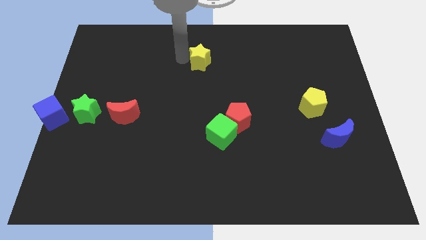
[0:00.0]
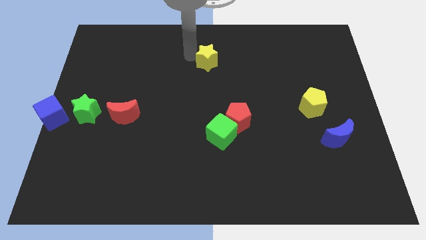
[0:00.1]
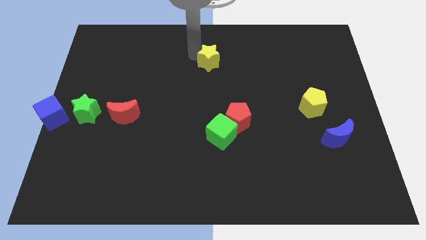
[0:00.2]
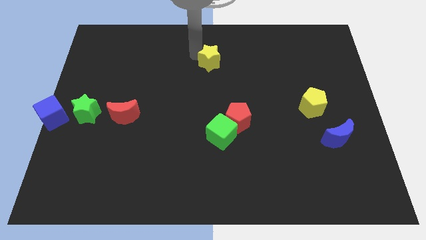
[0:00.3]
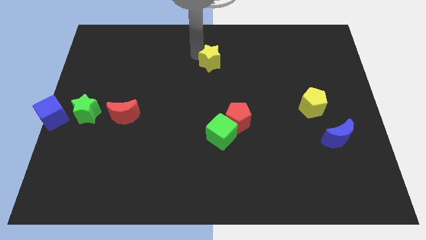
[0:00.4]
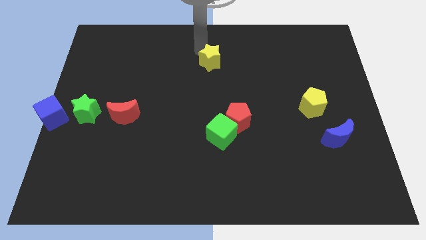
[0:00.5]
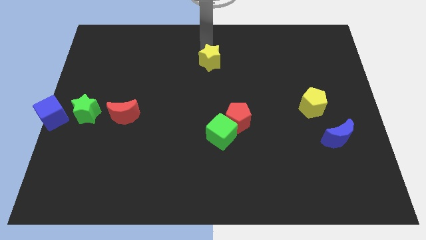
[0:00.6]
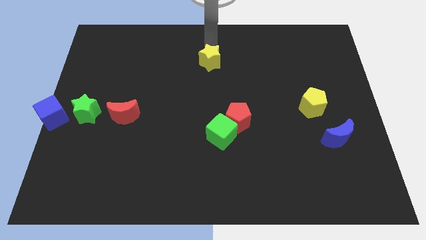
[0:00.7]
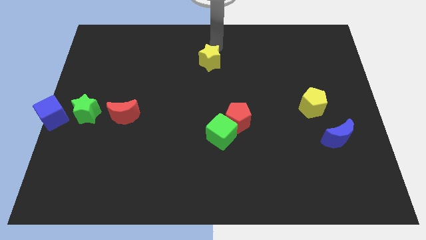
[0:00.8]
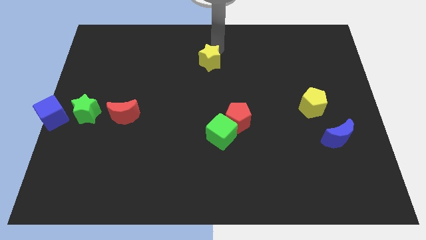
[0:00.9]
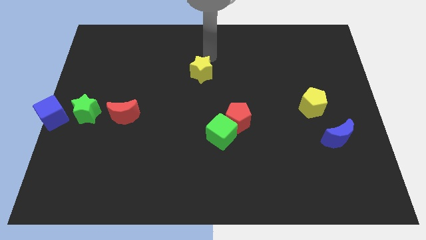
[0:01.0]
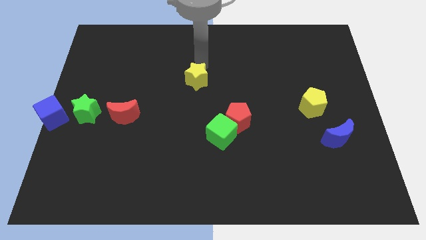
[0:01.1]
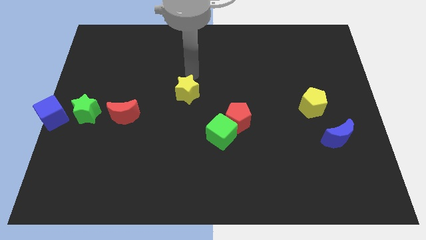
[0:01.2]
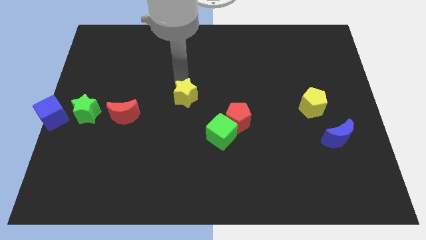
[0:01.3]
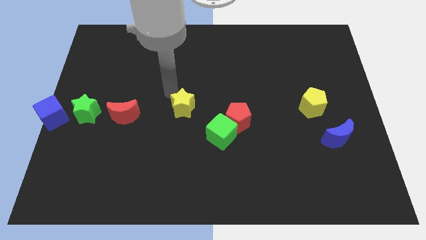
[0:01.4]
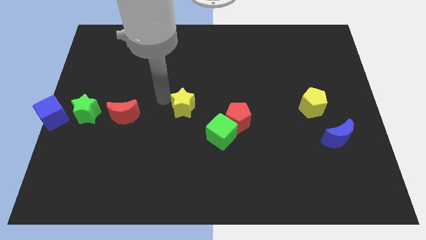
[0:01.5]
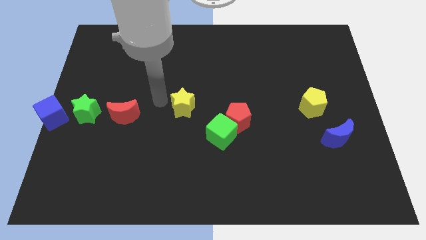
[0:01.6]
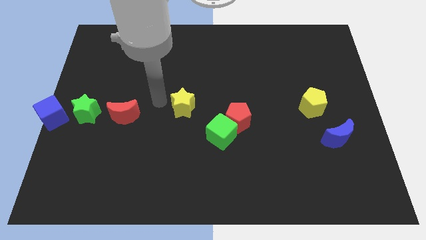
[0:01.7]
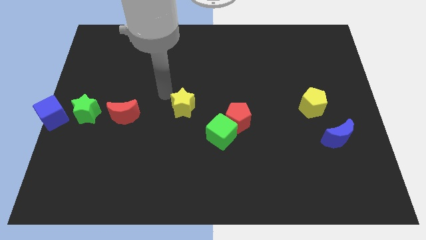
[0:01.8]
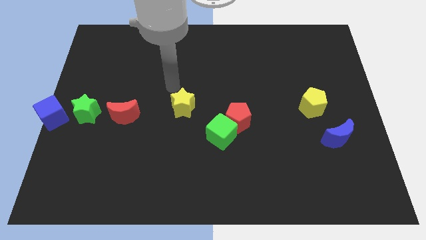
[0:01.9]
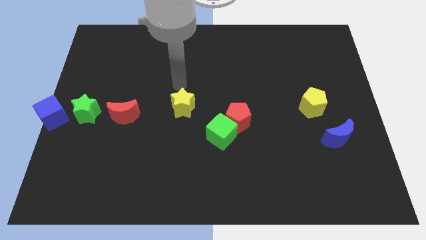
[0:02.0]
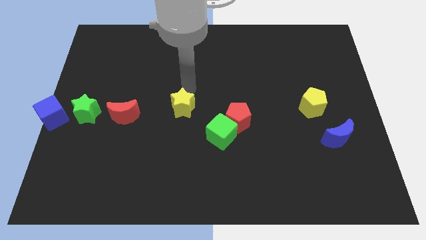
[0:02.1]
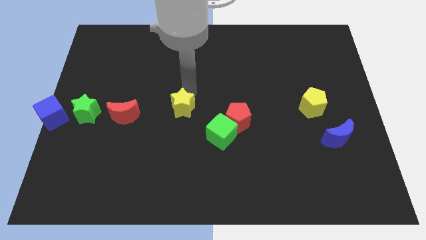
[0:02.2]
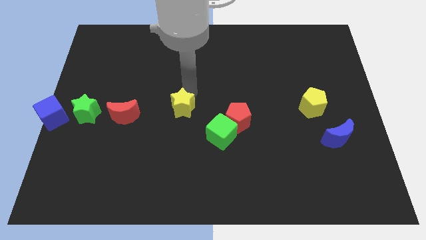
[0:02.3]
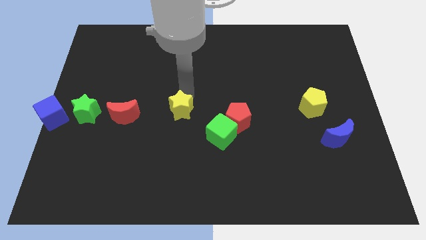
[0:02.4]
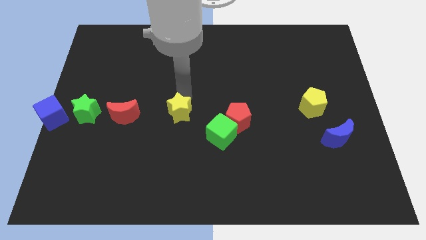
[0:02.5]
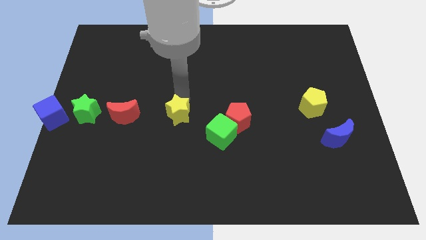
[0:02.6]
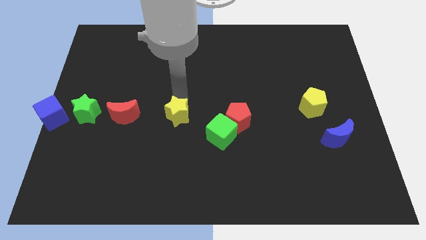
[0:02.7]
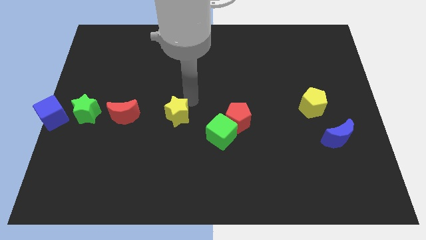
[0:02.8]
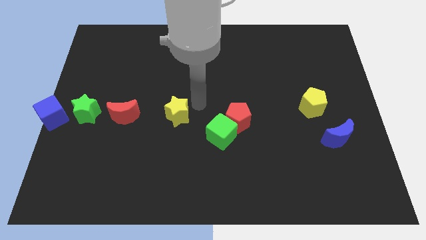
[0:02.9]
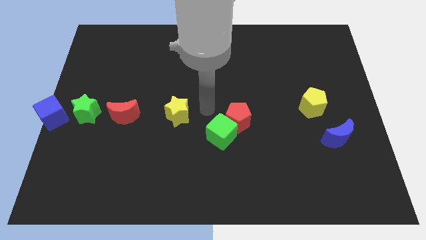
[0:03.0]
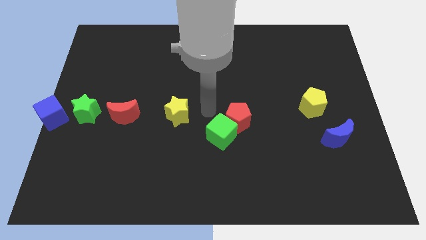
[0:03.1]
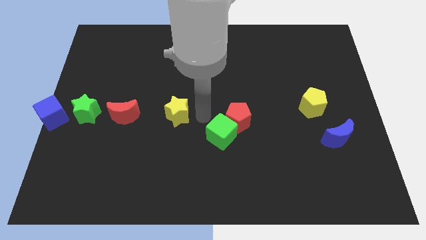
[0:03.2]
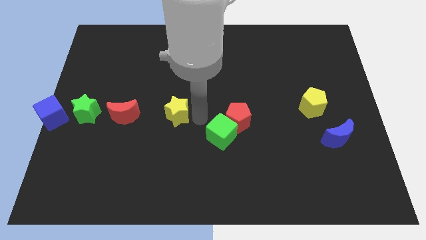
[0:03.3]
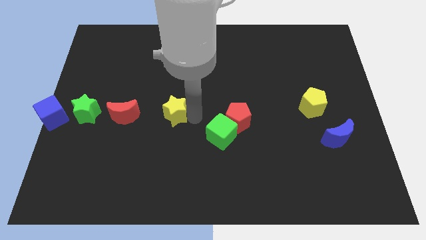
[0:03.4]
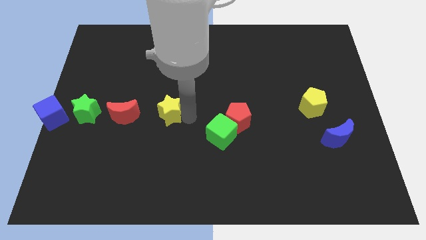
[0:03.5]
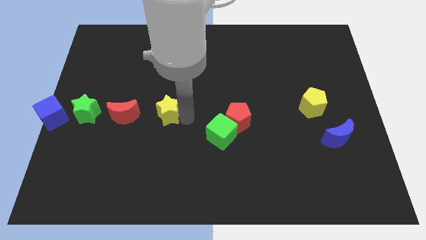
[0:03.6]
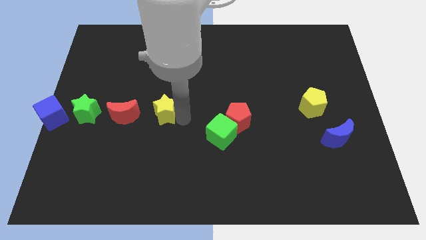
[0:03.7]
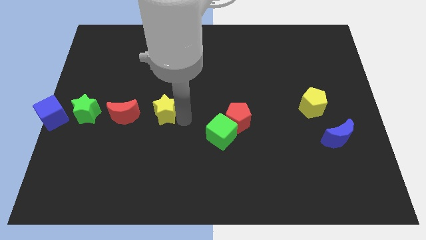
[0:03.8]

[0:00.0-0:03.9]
drag yellow star beside red moon

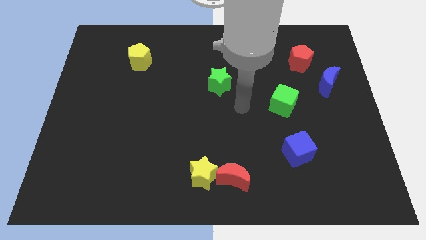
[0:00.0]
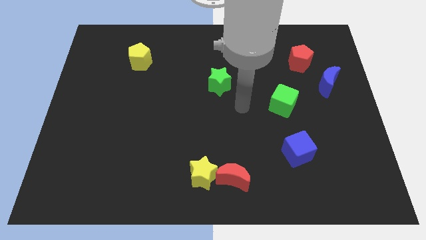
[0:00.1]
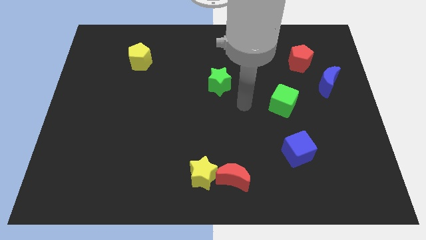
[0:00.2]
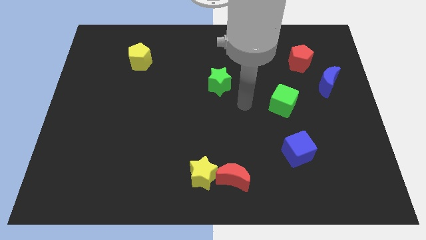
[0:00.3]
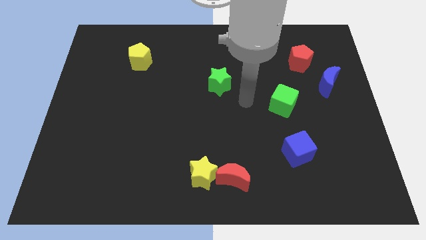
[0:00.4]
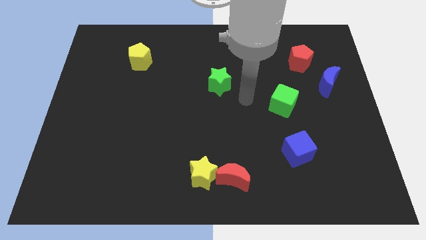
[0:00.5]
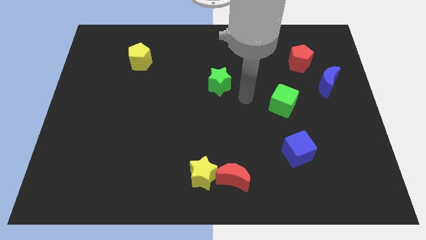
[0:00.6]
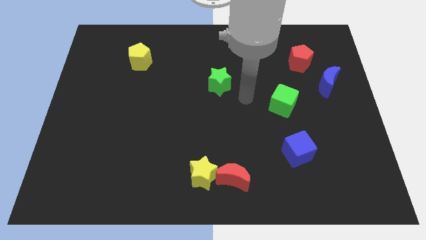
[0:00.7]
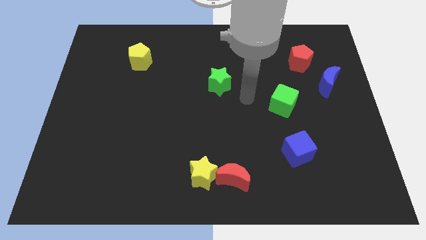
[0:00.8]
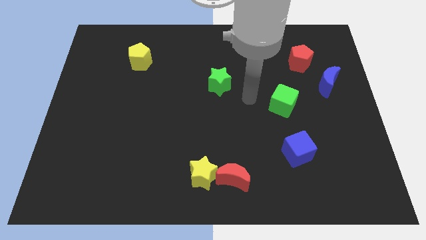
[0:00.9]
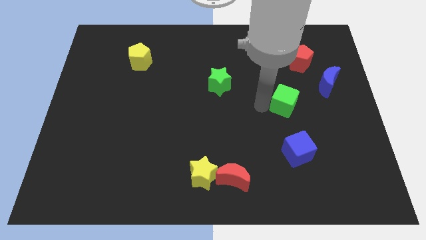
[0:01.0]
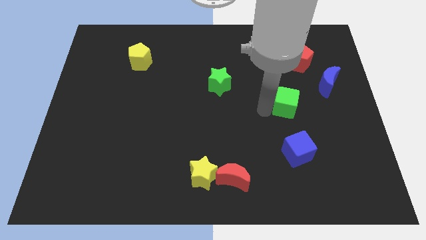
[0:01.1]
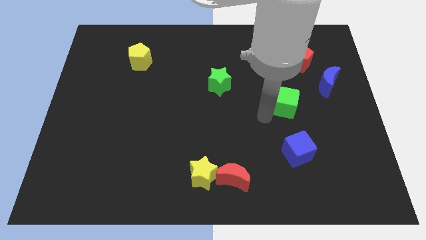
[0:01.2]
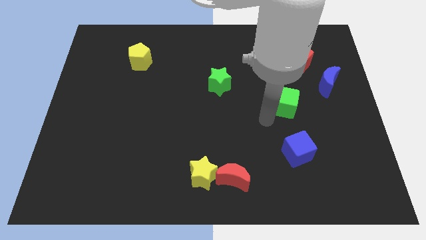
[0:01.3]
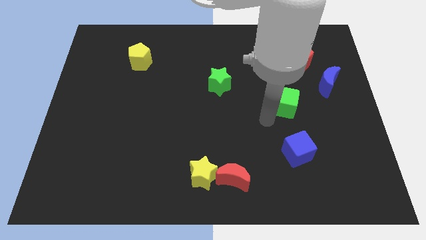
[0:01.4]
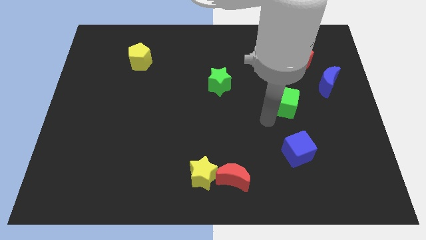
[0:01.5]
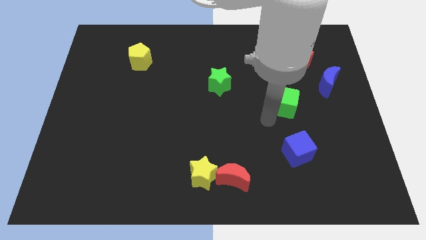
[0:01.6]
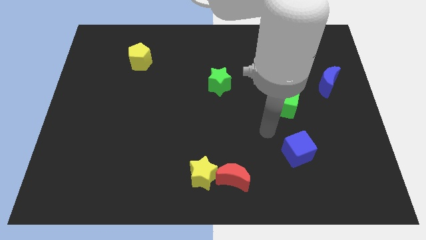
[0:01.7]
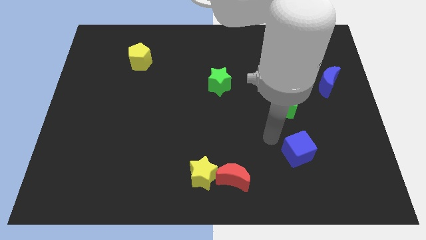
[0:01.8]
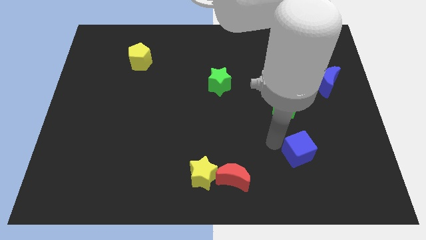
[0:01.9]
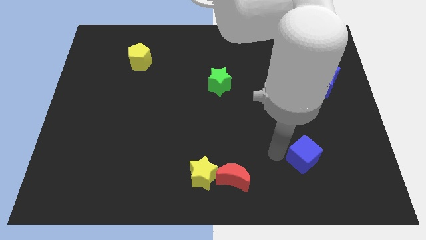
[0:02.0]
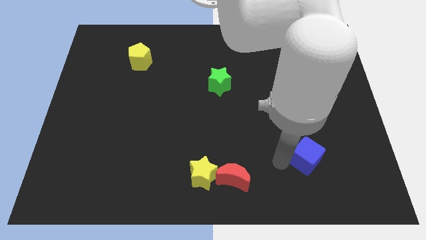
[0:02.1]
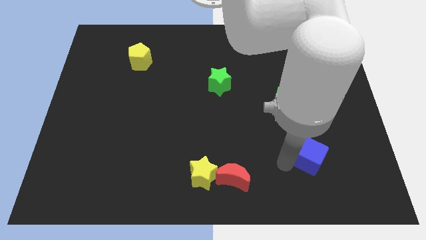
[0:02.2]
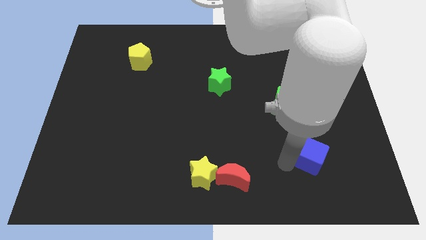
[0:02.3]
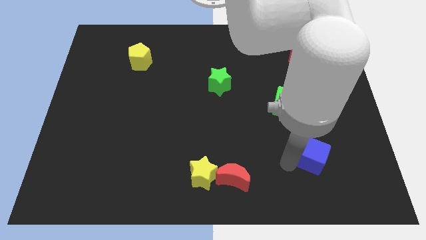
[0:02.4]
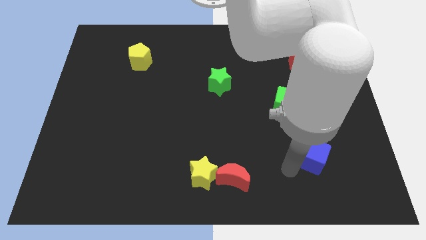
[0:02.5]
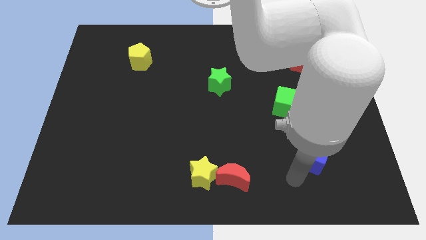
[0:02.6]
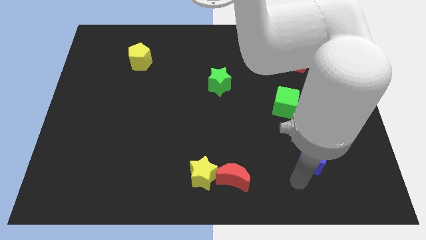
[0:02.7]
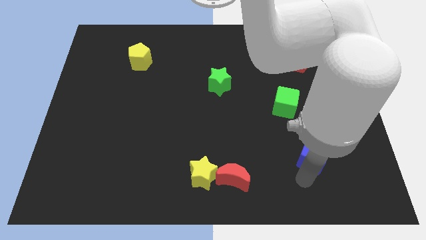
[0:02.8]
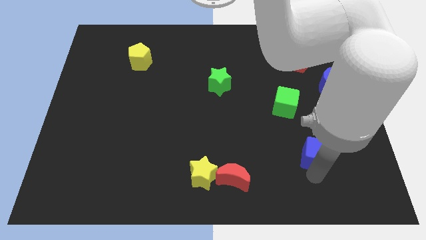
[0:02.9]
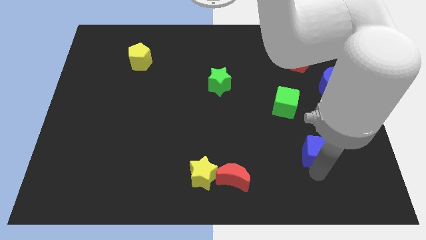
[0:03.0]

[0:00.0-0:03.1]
slide the blue cube slightly to the right

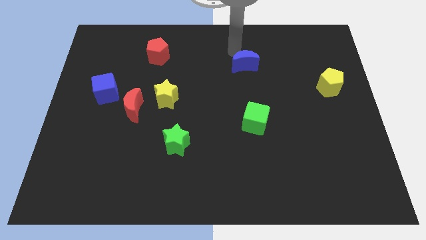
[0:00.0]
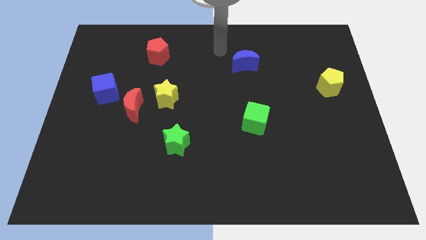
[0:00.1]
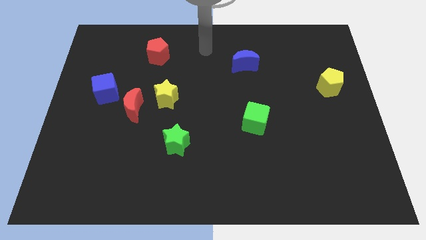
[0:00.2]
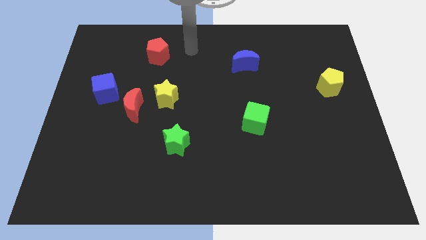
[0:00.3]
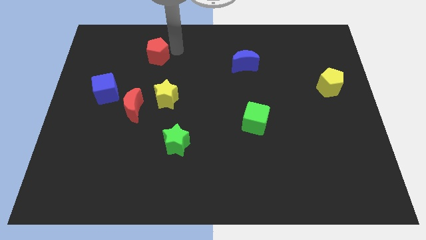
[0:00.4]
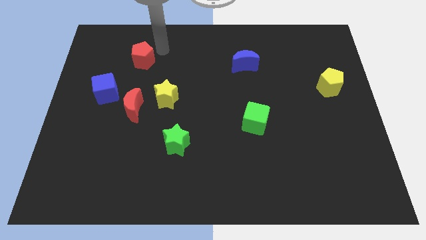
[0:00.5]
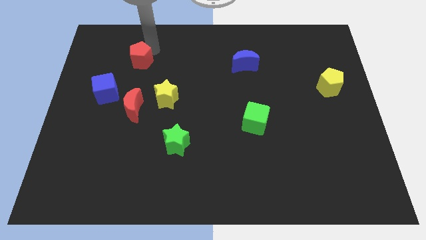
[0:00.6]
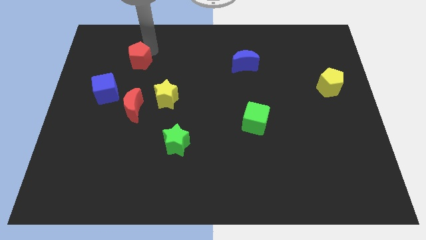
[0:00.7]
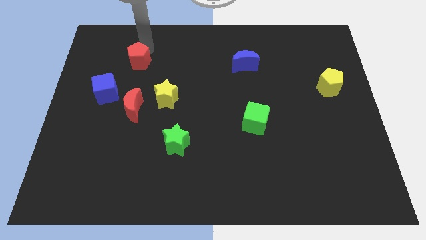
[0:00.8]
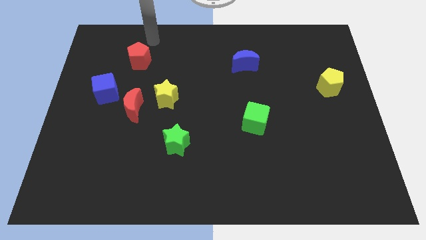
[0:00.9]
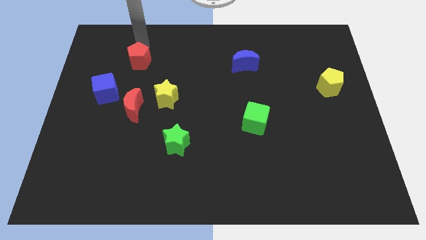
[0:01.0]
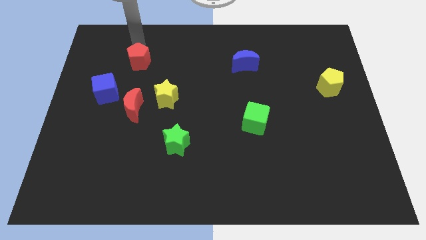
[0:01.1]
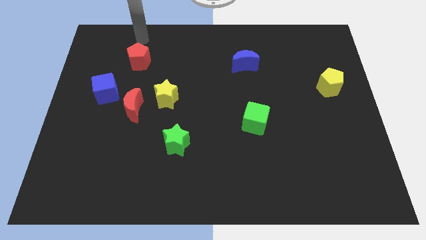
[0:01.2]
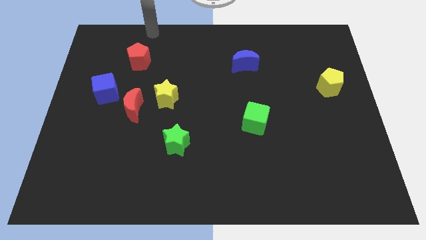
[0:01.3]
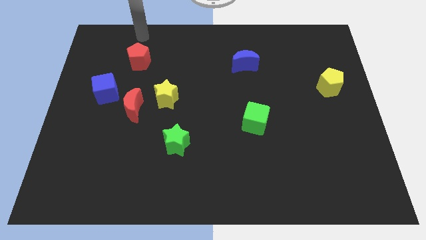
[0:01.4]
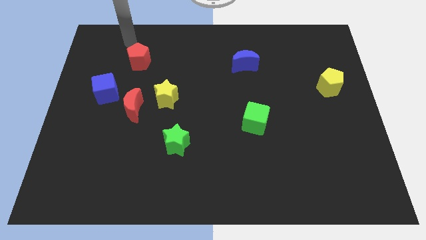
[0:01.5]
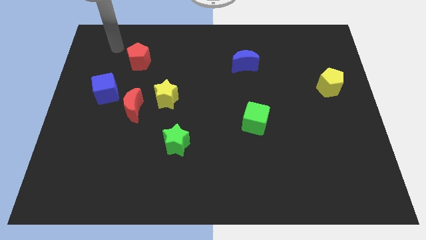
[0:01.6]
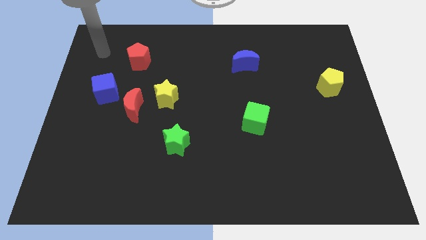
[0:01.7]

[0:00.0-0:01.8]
place the red pentagon above the red moon

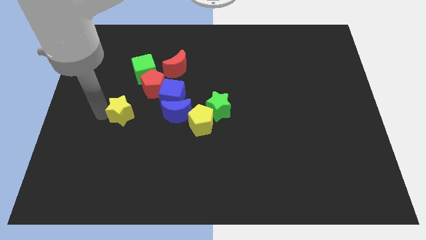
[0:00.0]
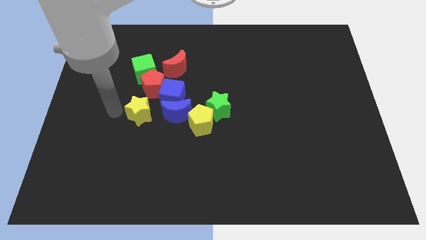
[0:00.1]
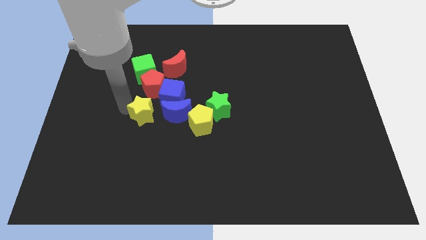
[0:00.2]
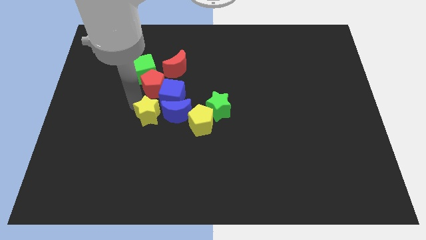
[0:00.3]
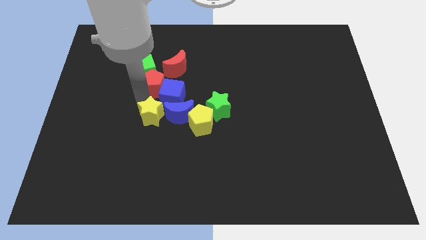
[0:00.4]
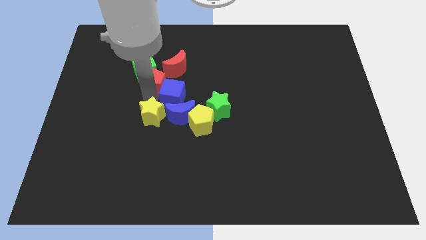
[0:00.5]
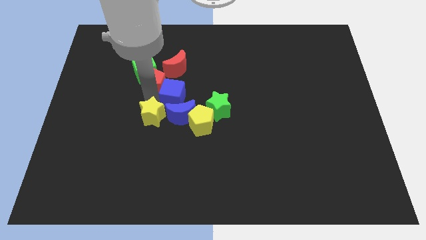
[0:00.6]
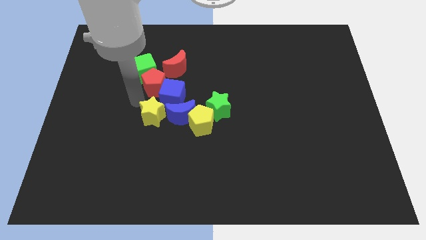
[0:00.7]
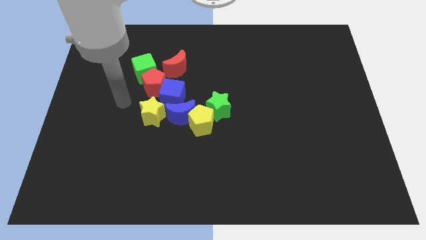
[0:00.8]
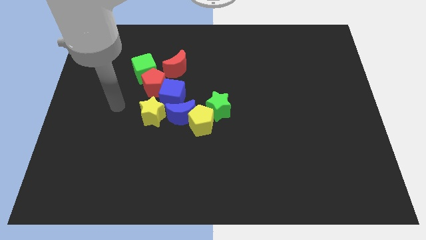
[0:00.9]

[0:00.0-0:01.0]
move the yellow star into the blue crescent
